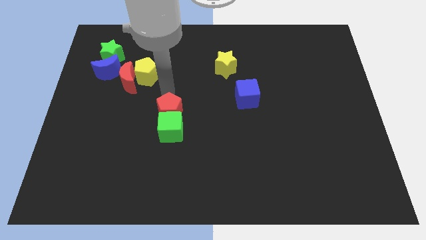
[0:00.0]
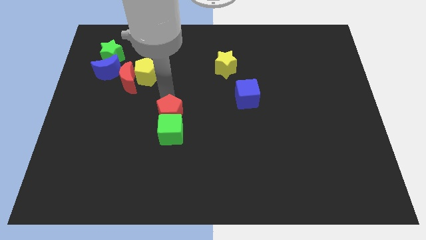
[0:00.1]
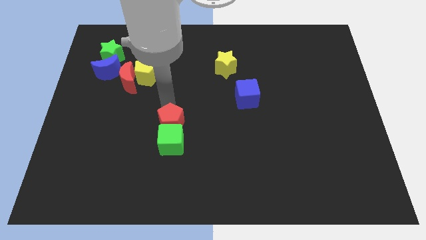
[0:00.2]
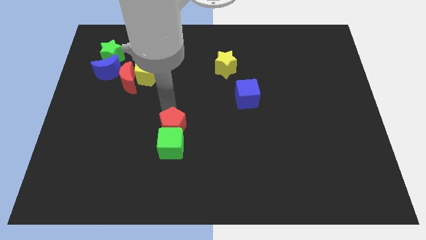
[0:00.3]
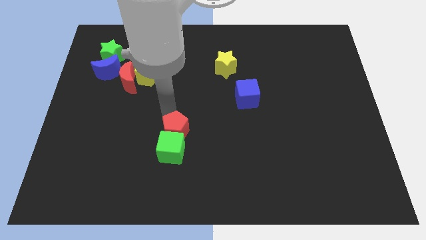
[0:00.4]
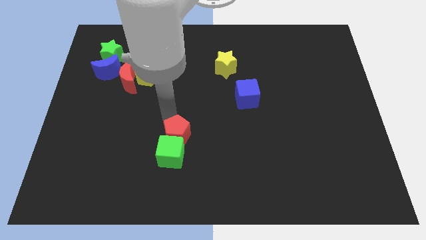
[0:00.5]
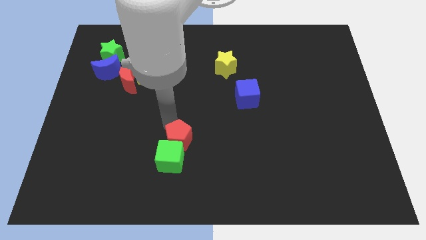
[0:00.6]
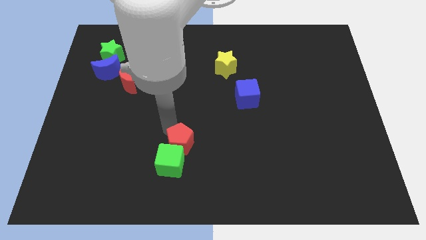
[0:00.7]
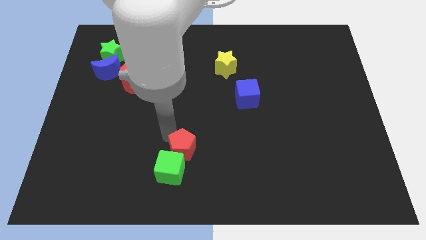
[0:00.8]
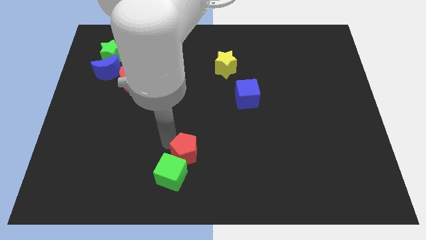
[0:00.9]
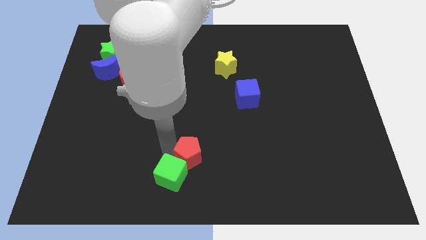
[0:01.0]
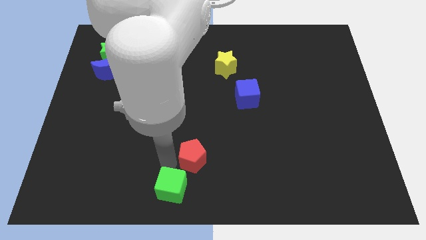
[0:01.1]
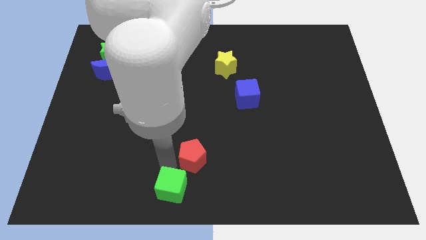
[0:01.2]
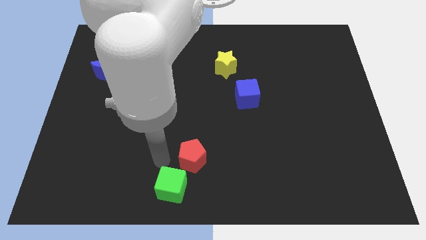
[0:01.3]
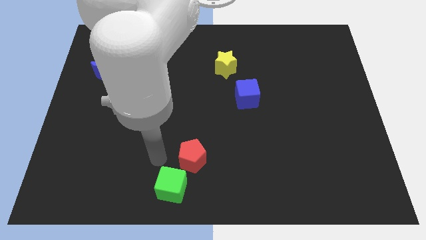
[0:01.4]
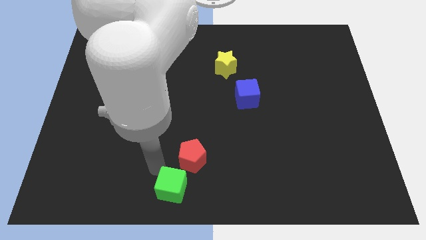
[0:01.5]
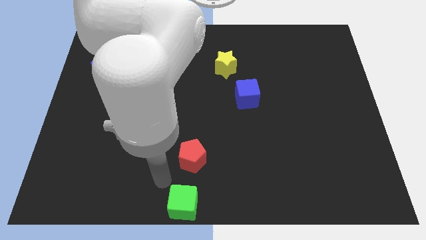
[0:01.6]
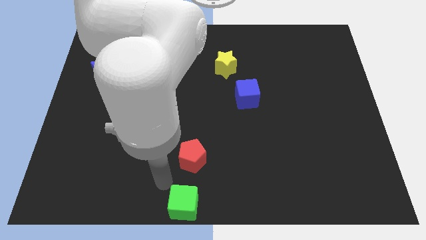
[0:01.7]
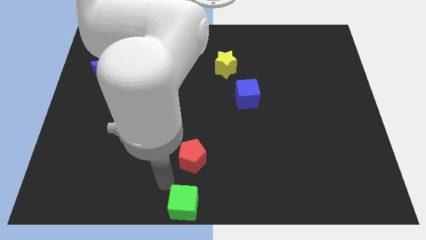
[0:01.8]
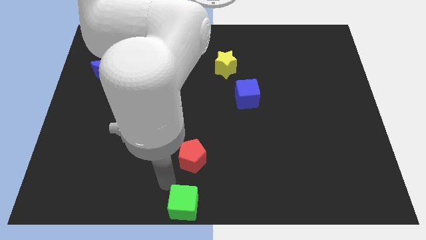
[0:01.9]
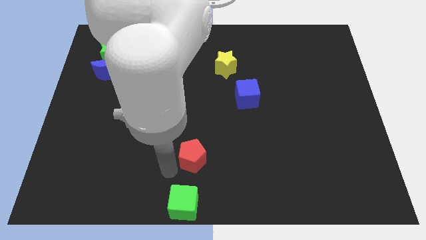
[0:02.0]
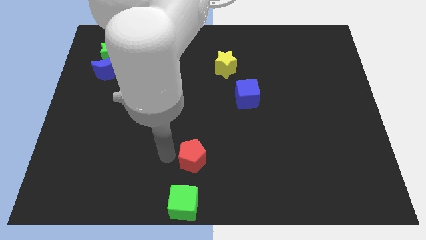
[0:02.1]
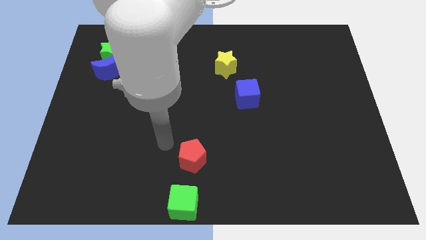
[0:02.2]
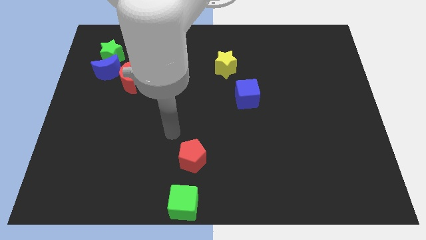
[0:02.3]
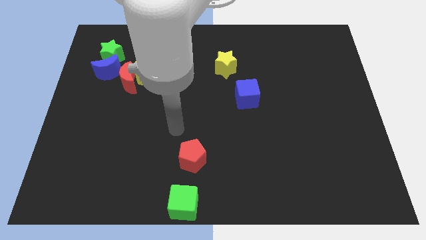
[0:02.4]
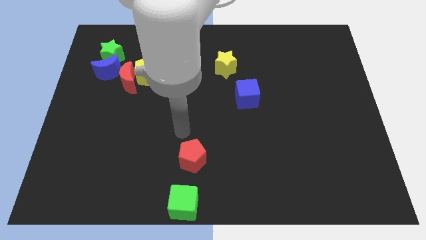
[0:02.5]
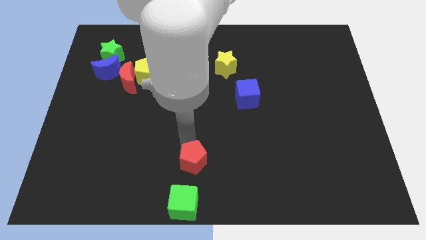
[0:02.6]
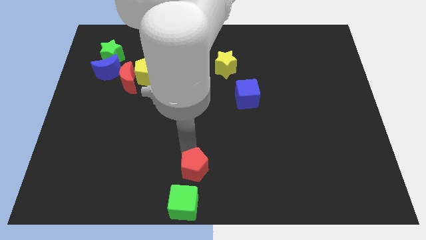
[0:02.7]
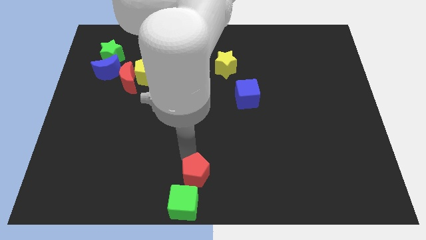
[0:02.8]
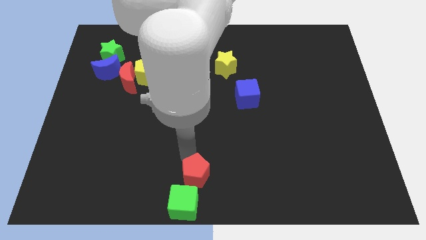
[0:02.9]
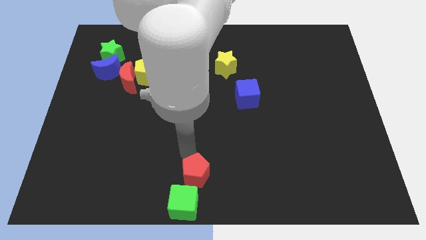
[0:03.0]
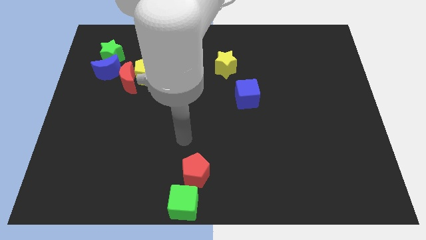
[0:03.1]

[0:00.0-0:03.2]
slide red pentagon and the green cube to the bottom center

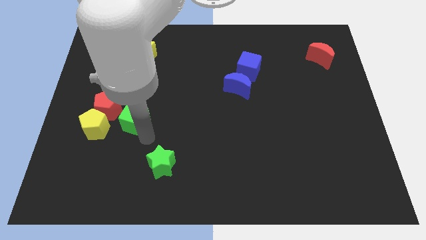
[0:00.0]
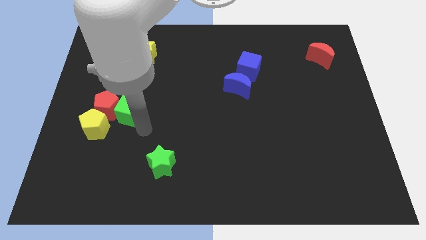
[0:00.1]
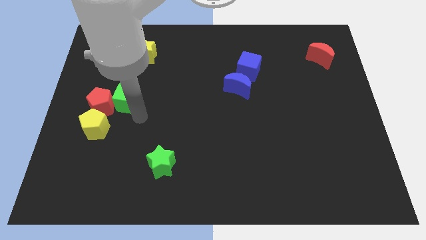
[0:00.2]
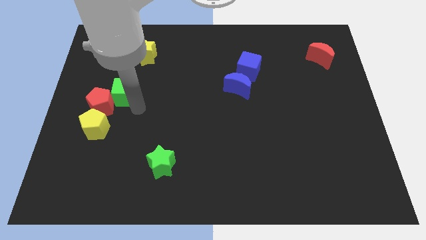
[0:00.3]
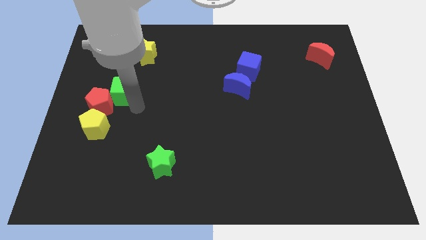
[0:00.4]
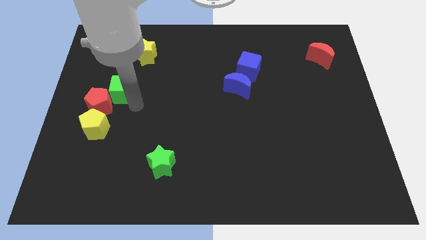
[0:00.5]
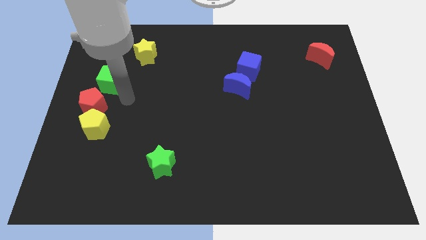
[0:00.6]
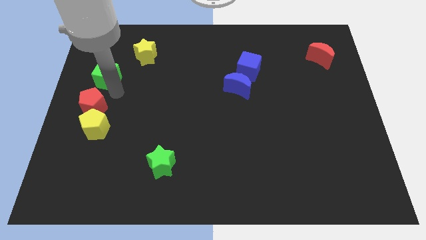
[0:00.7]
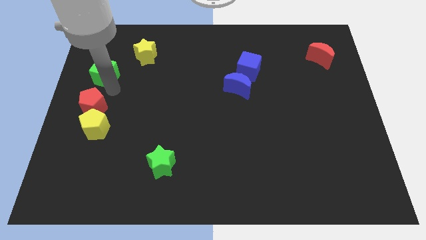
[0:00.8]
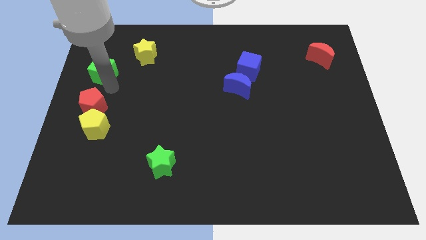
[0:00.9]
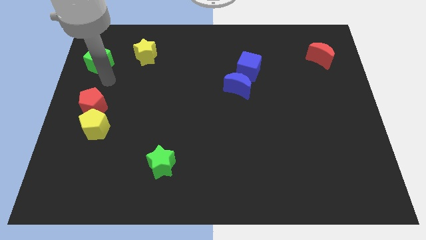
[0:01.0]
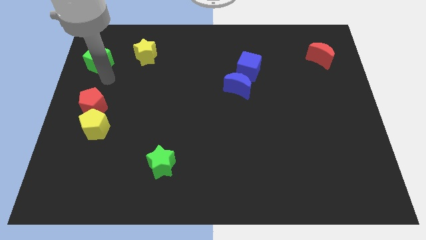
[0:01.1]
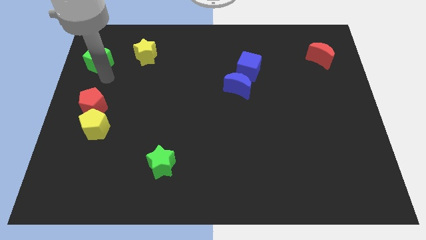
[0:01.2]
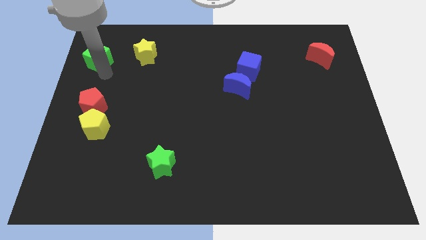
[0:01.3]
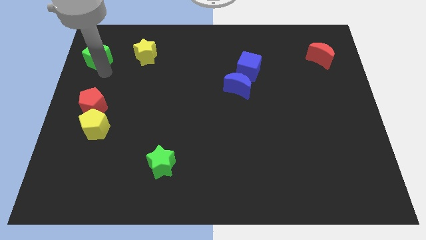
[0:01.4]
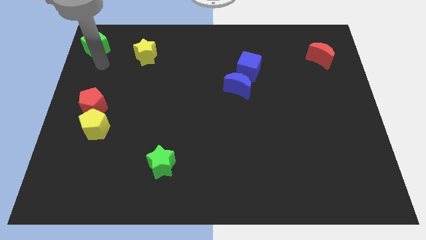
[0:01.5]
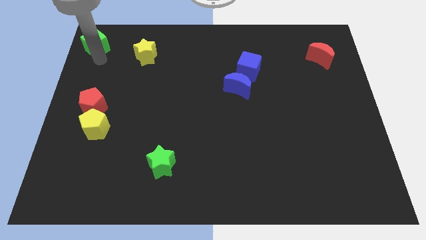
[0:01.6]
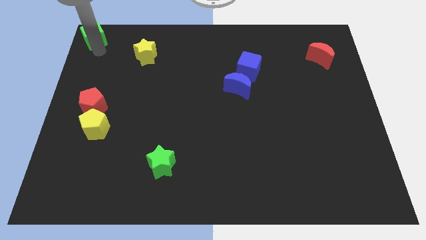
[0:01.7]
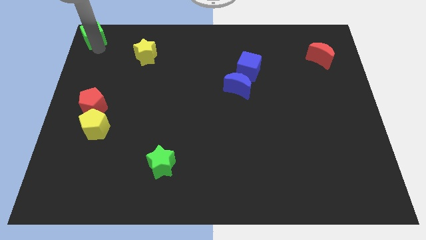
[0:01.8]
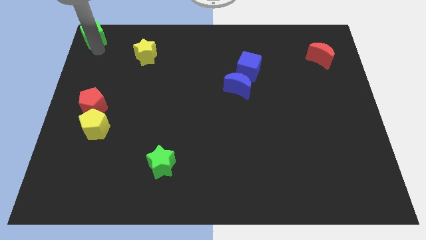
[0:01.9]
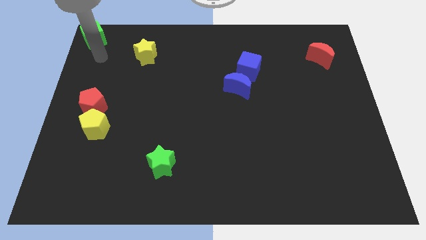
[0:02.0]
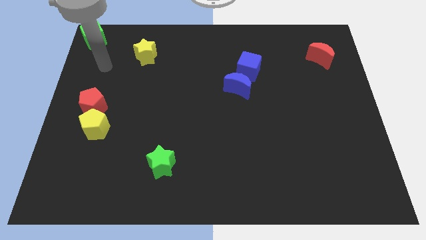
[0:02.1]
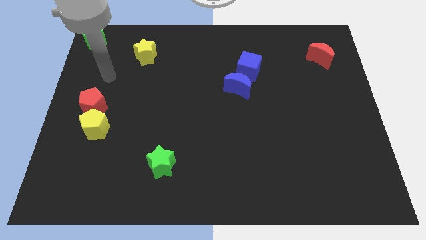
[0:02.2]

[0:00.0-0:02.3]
place the green cube to the top left corner

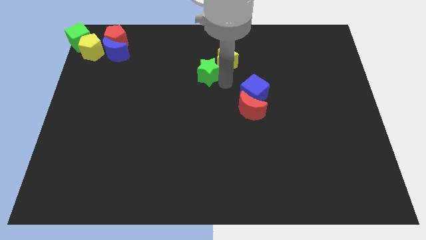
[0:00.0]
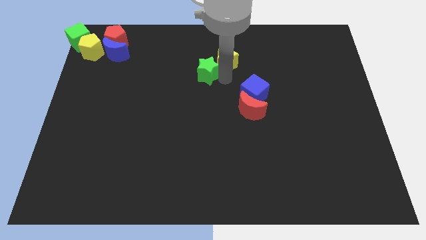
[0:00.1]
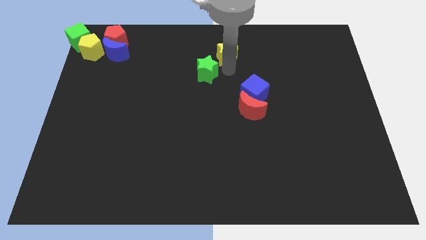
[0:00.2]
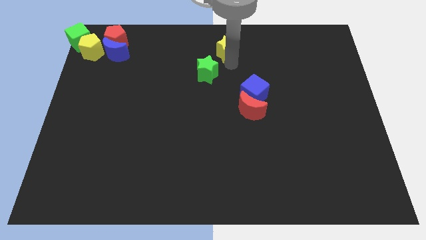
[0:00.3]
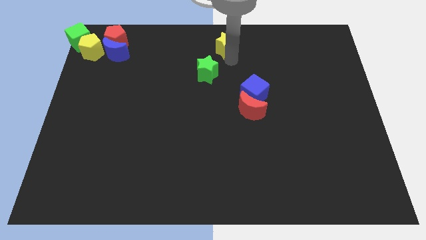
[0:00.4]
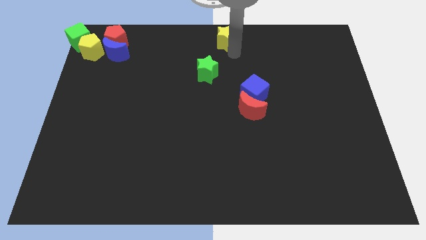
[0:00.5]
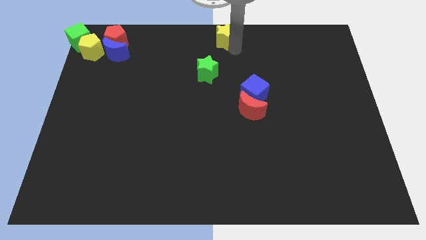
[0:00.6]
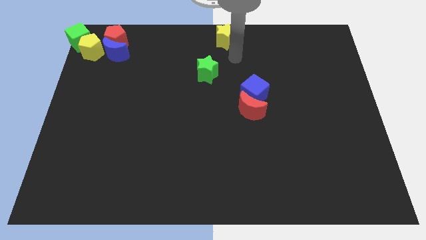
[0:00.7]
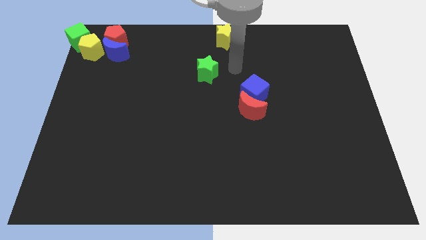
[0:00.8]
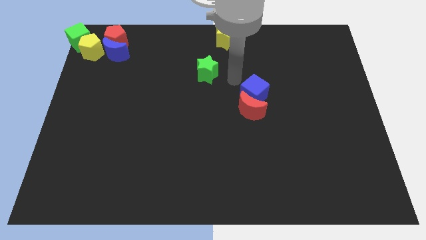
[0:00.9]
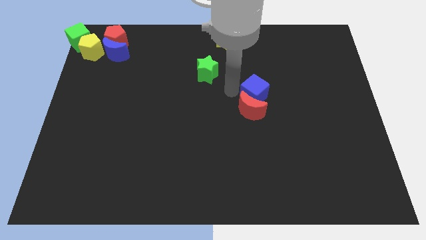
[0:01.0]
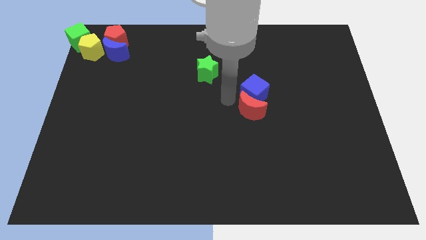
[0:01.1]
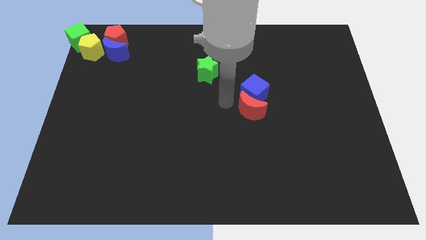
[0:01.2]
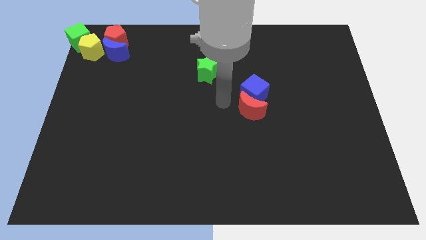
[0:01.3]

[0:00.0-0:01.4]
push the yellow star away from the green star

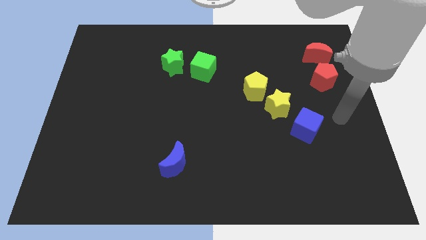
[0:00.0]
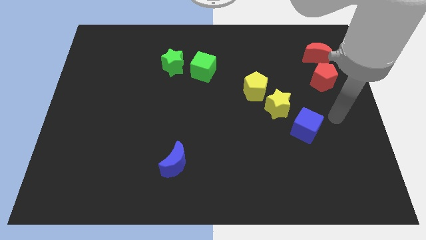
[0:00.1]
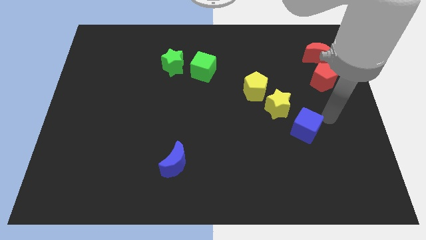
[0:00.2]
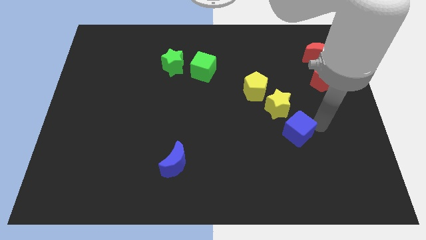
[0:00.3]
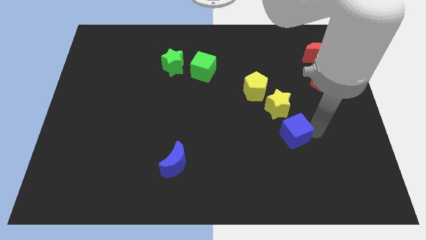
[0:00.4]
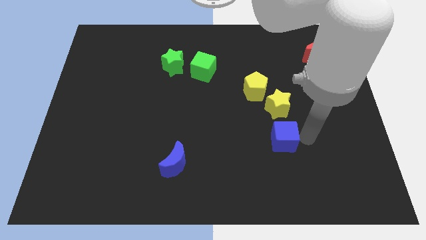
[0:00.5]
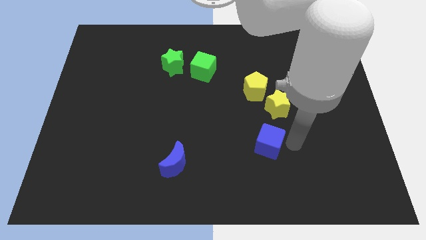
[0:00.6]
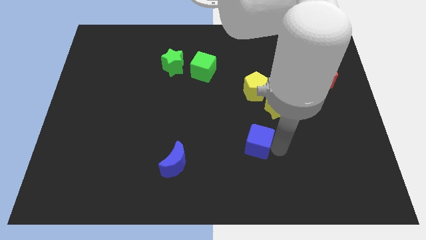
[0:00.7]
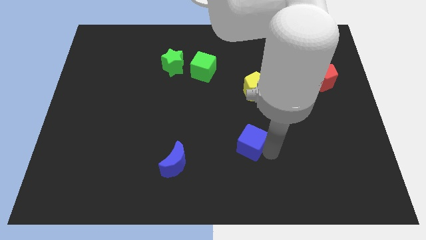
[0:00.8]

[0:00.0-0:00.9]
push the blue cube below the yellow pentagon

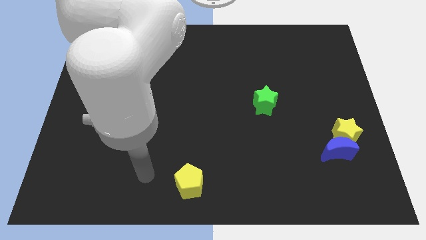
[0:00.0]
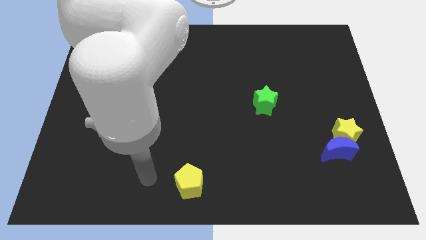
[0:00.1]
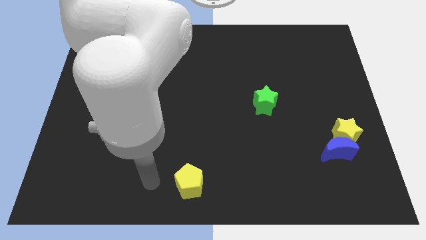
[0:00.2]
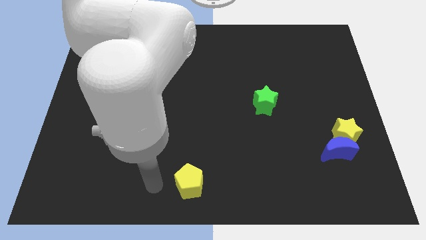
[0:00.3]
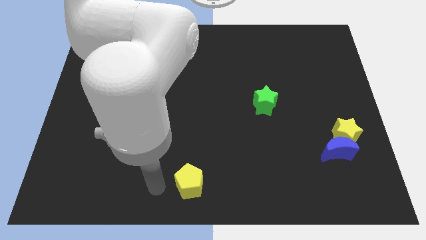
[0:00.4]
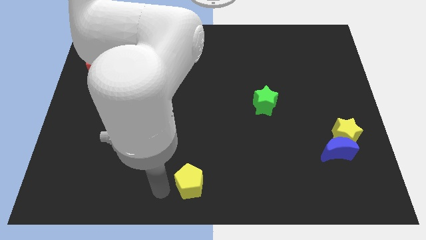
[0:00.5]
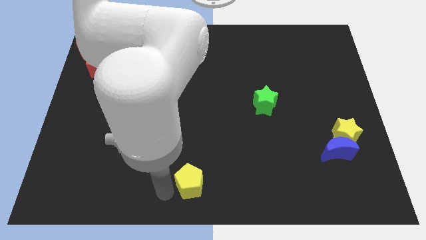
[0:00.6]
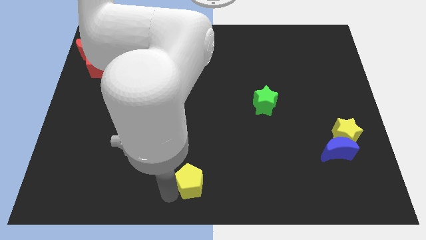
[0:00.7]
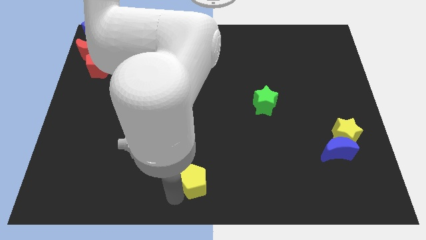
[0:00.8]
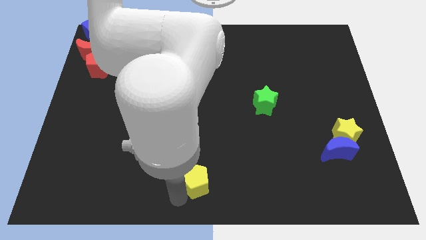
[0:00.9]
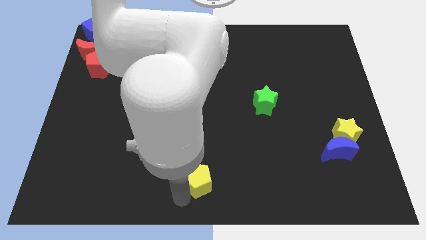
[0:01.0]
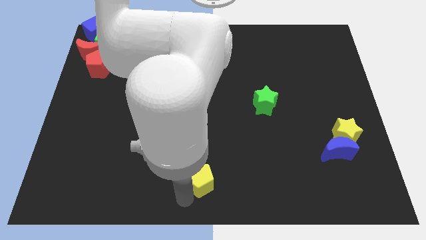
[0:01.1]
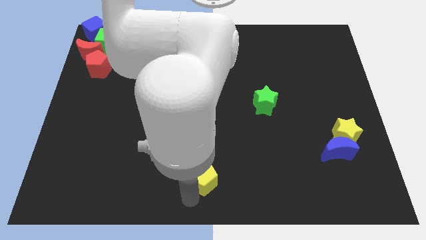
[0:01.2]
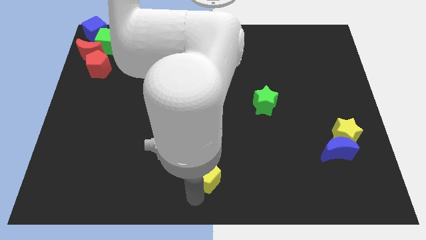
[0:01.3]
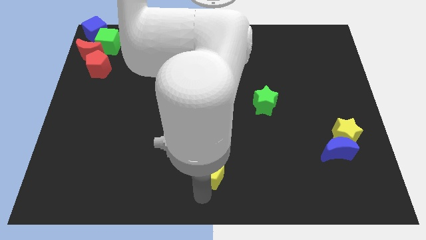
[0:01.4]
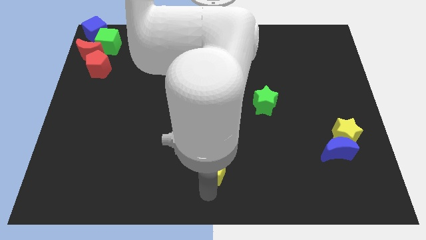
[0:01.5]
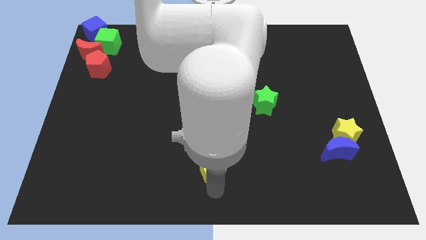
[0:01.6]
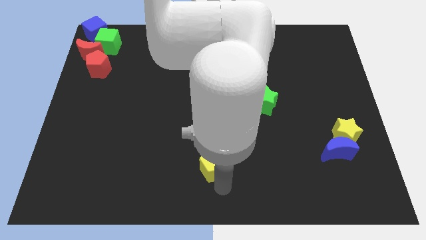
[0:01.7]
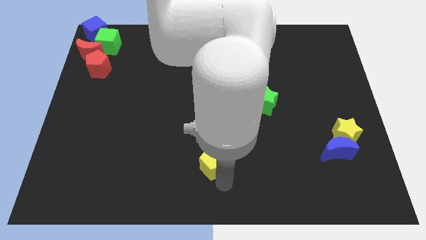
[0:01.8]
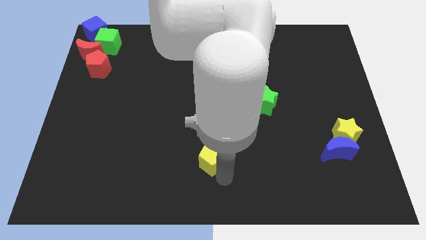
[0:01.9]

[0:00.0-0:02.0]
move the yellow pentagon towards the bottom centre of the board
